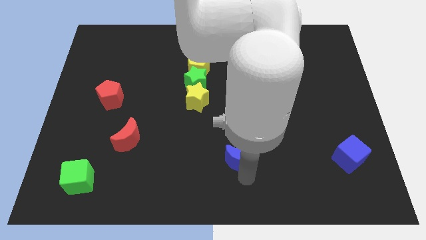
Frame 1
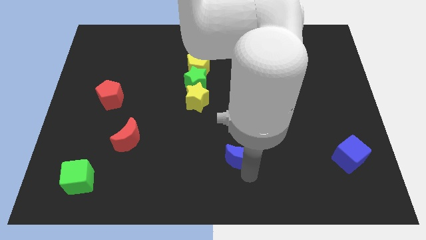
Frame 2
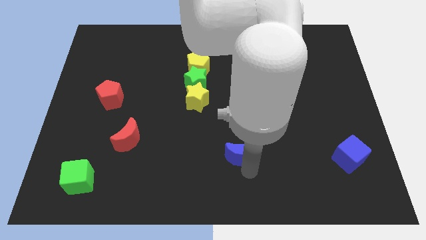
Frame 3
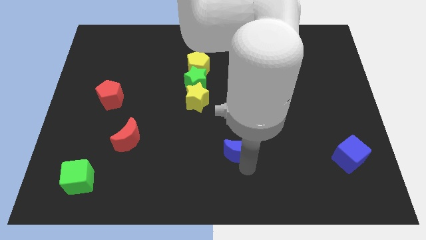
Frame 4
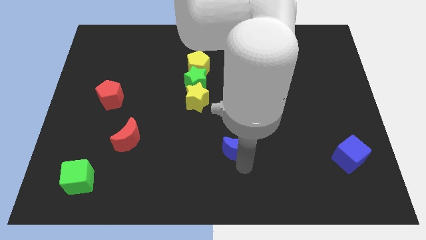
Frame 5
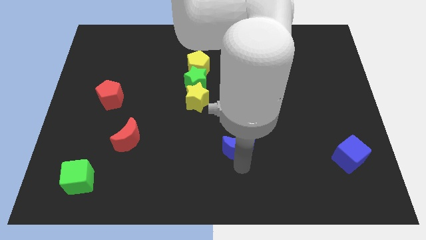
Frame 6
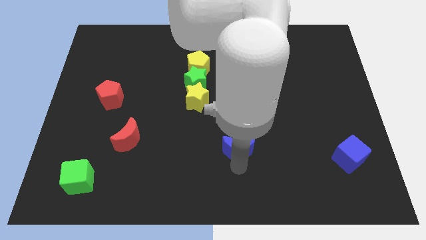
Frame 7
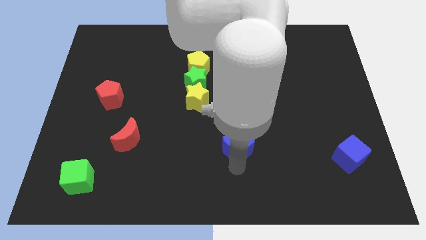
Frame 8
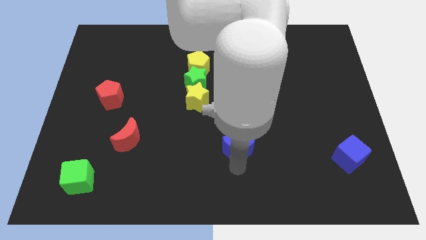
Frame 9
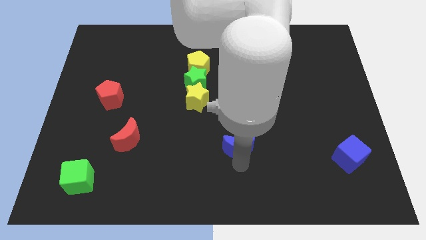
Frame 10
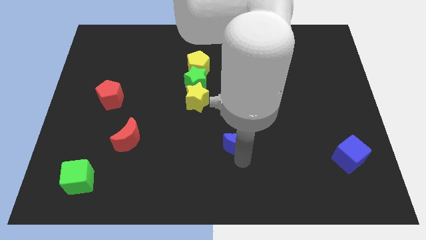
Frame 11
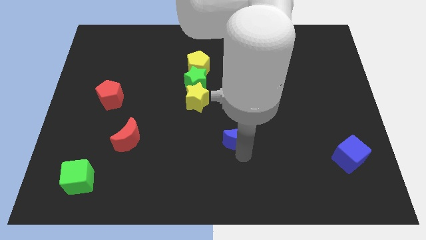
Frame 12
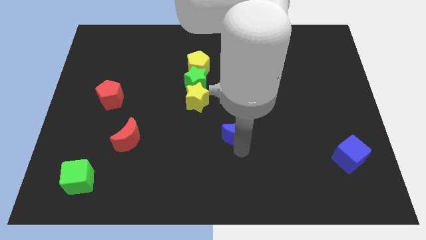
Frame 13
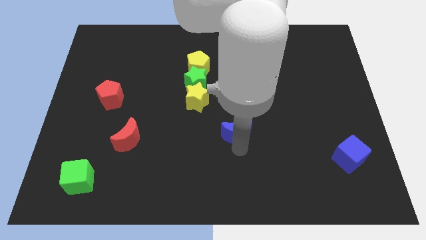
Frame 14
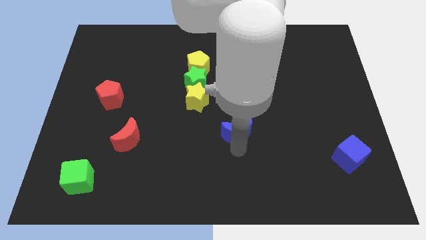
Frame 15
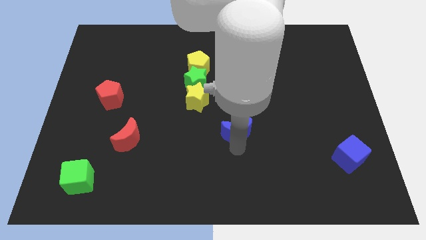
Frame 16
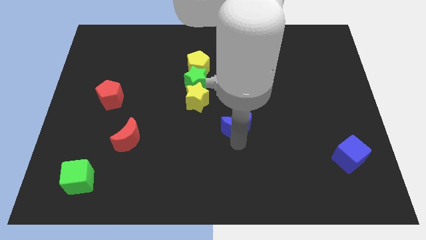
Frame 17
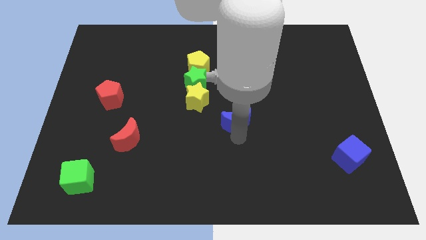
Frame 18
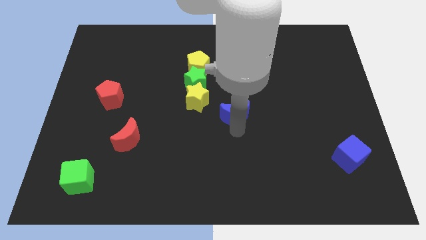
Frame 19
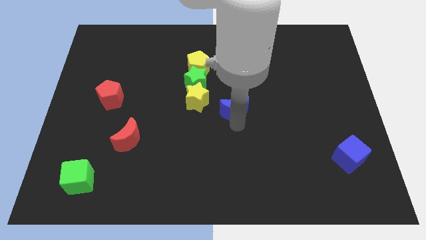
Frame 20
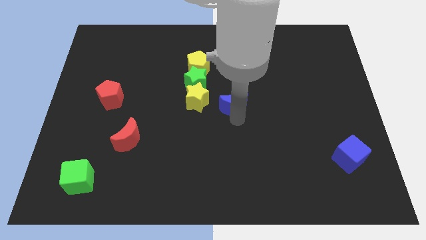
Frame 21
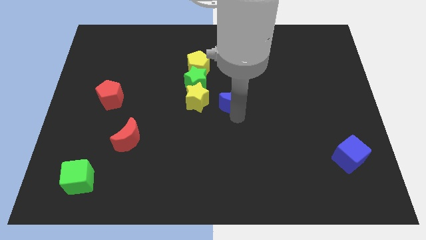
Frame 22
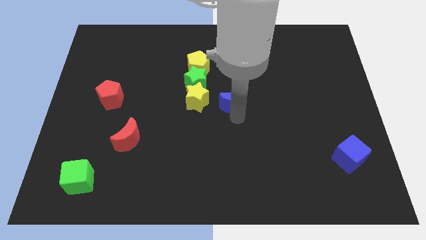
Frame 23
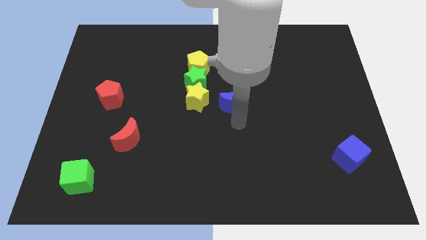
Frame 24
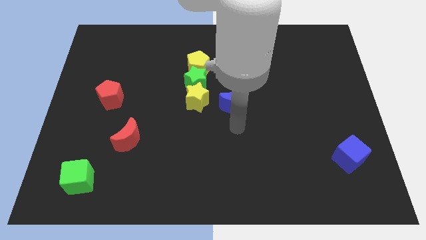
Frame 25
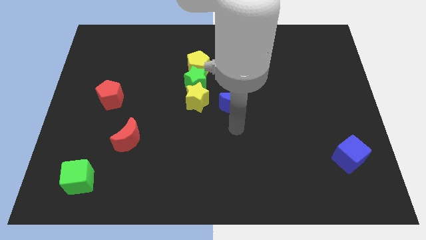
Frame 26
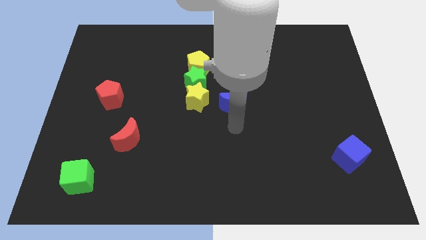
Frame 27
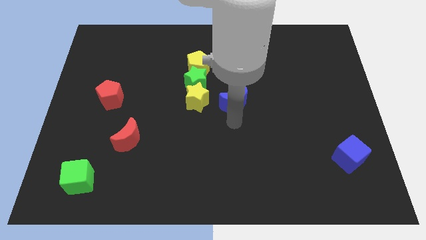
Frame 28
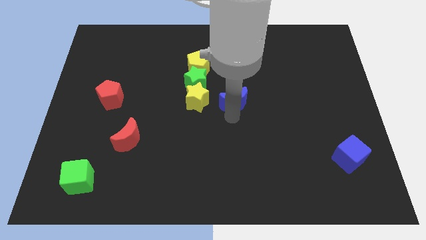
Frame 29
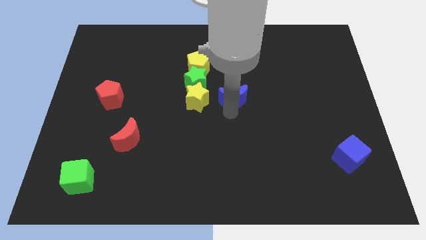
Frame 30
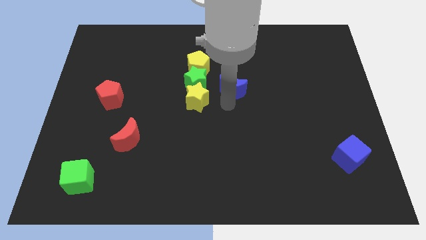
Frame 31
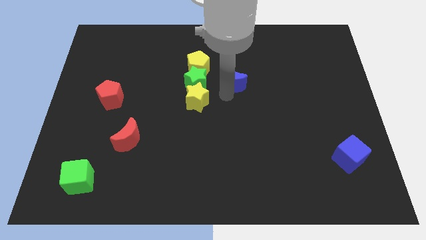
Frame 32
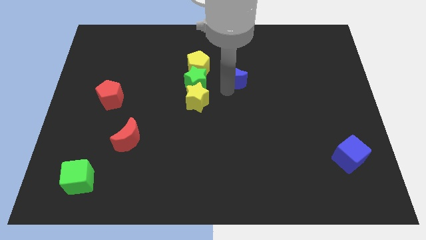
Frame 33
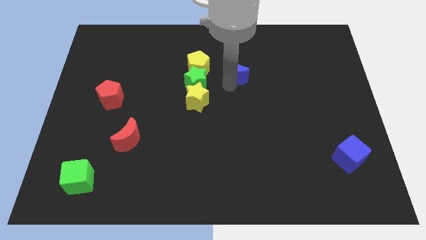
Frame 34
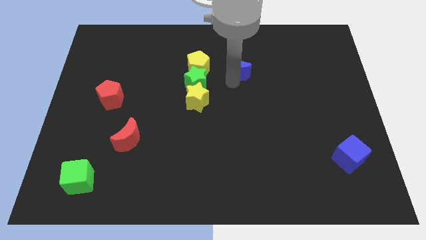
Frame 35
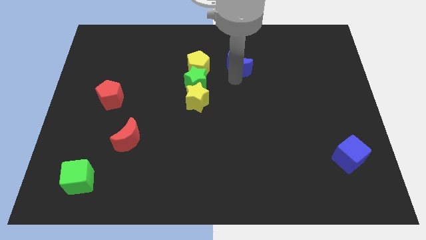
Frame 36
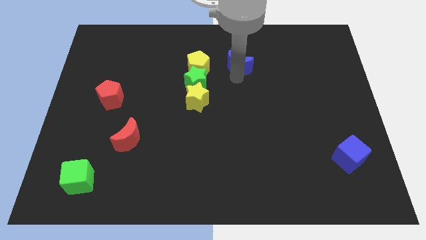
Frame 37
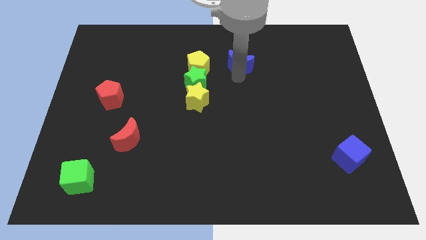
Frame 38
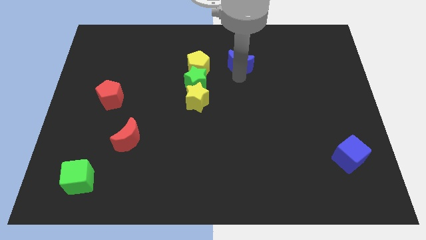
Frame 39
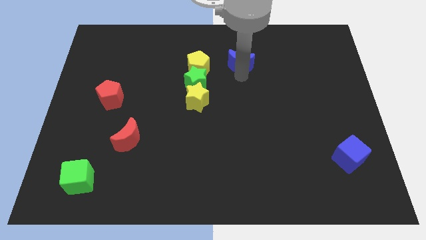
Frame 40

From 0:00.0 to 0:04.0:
push blue moon parallel right to yellow pentagon

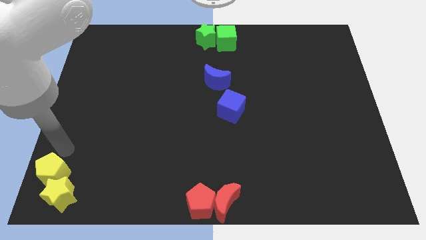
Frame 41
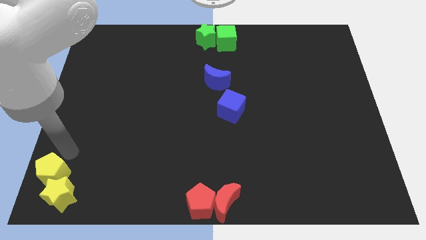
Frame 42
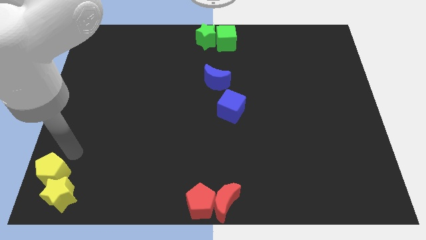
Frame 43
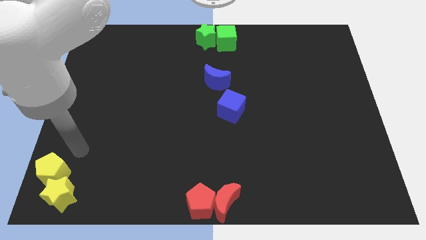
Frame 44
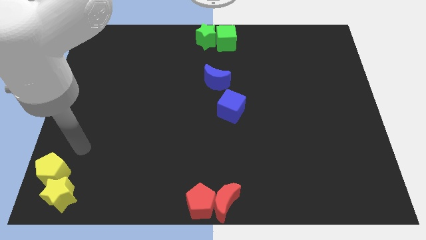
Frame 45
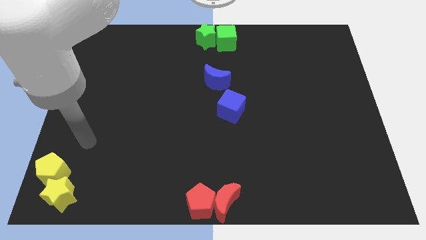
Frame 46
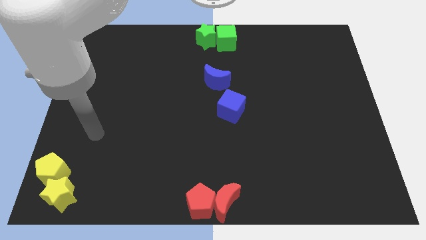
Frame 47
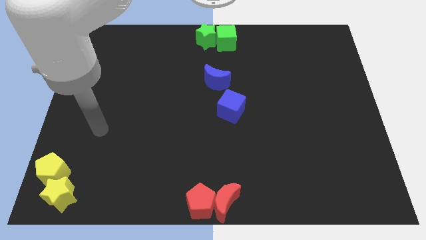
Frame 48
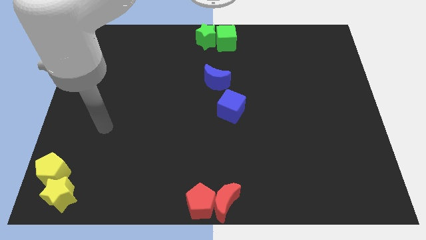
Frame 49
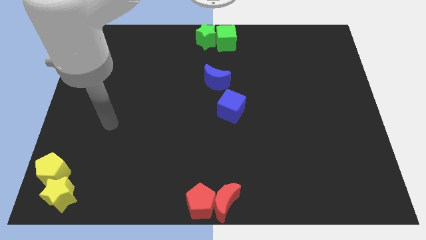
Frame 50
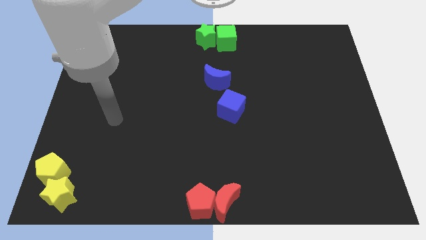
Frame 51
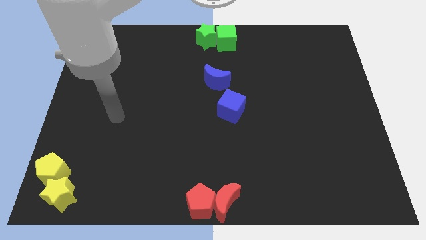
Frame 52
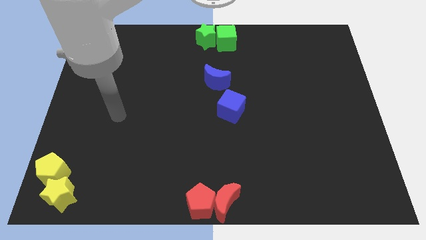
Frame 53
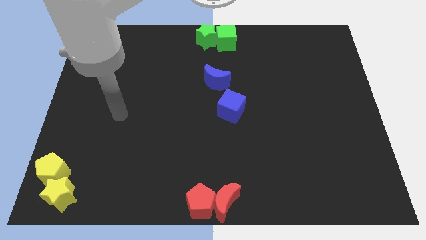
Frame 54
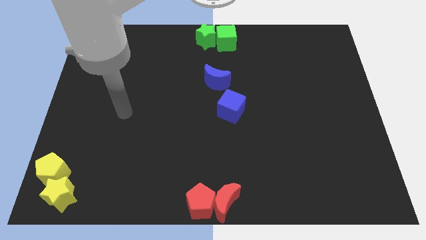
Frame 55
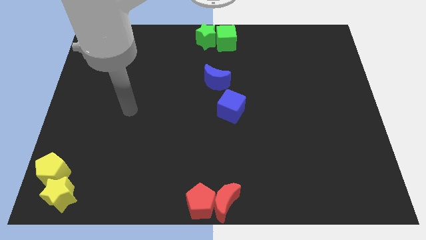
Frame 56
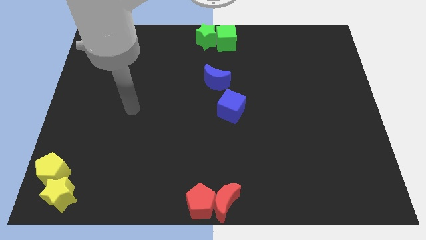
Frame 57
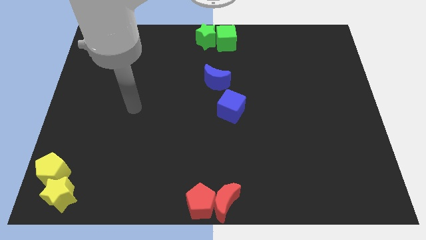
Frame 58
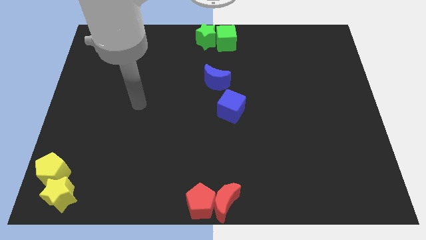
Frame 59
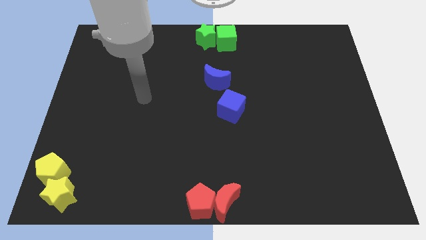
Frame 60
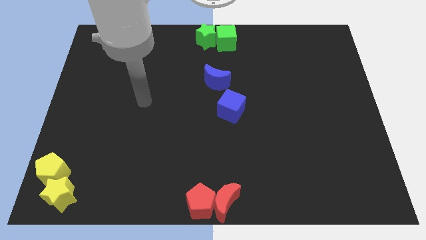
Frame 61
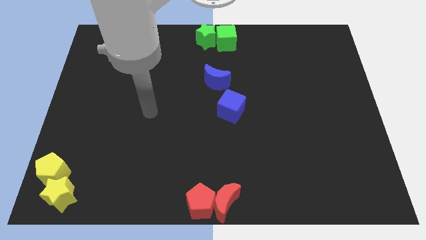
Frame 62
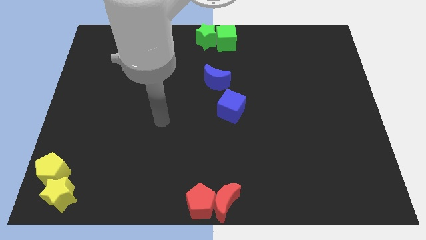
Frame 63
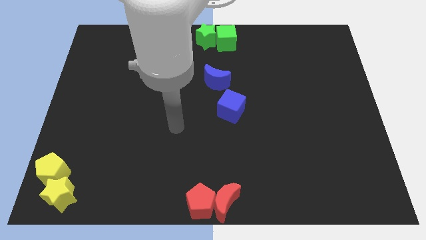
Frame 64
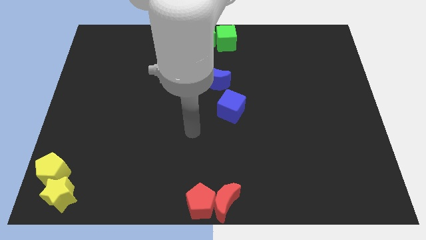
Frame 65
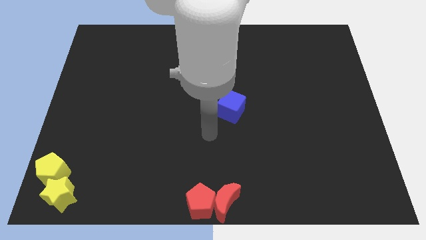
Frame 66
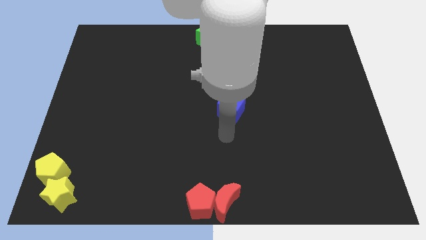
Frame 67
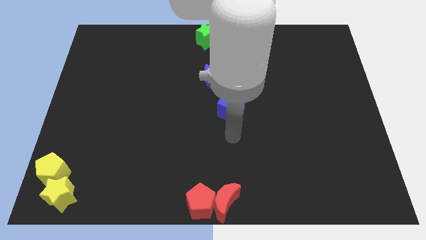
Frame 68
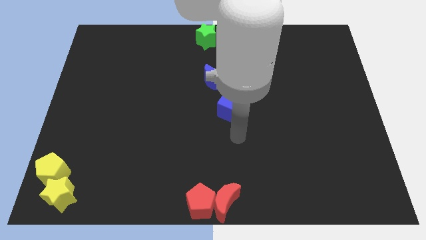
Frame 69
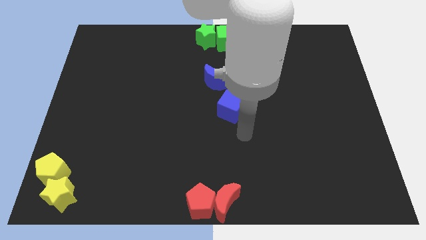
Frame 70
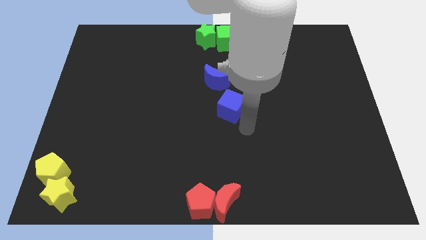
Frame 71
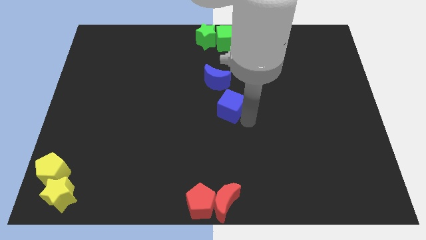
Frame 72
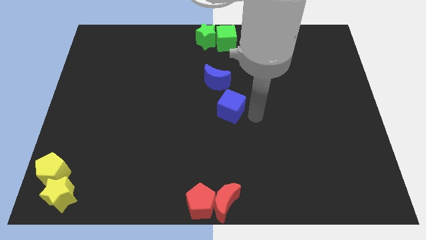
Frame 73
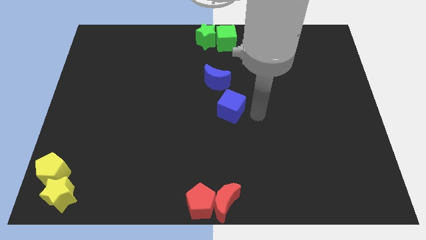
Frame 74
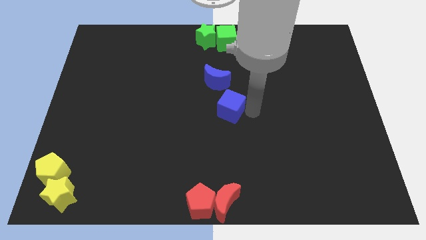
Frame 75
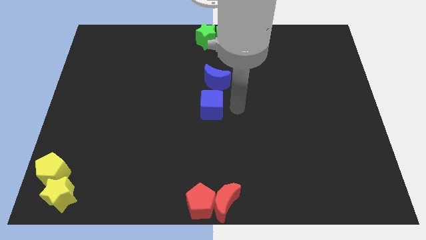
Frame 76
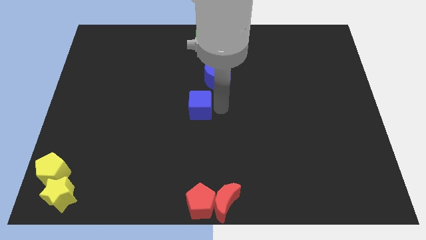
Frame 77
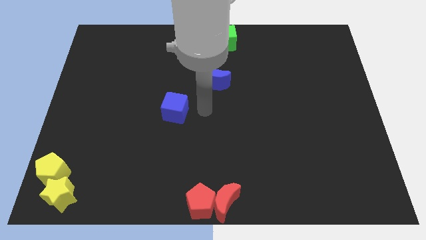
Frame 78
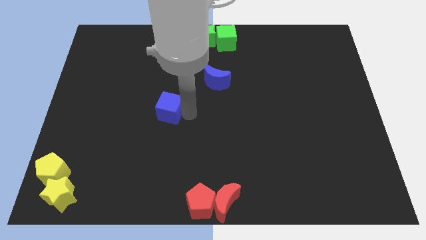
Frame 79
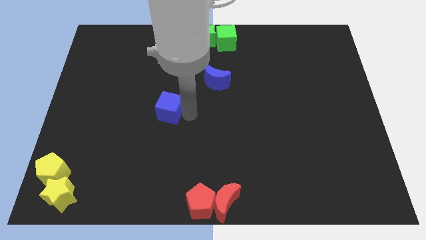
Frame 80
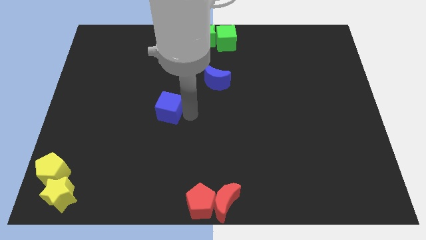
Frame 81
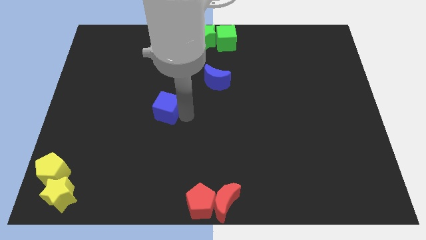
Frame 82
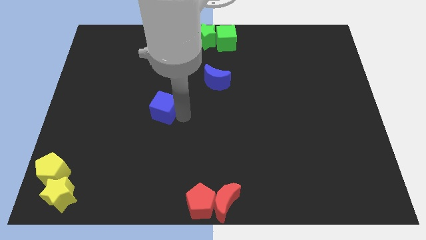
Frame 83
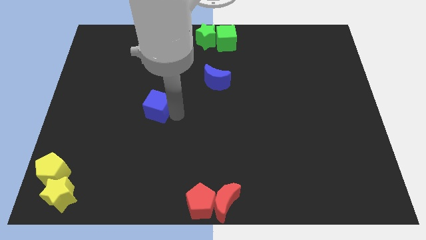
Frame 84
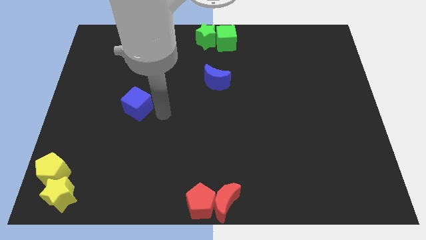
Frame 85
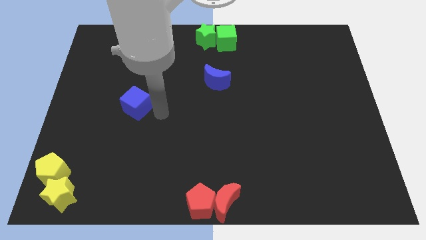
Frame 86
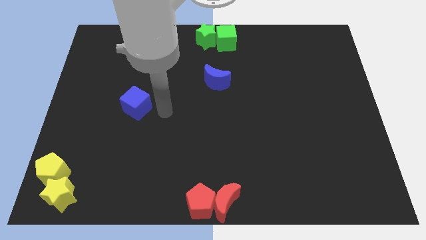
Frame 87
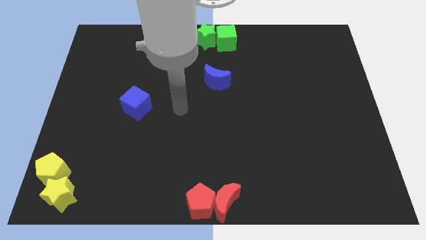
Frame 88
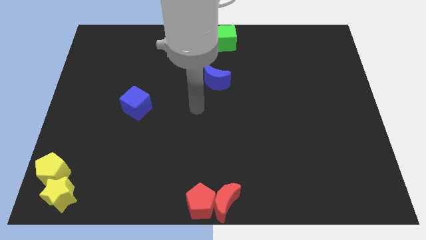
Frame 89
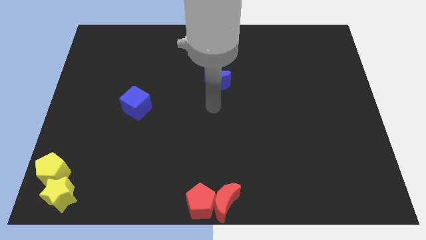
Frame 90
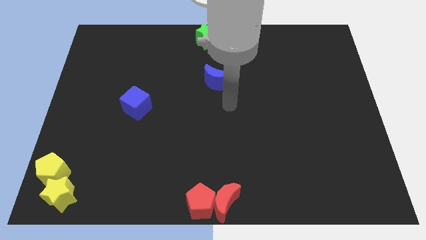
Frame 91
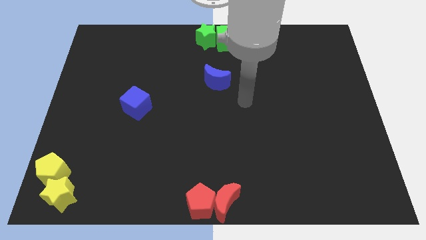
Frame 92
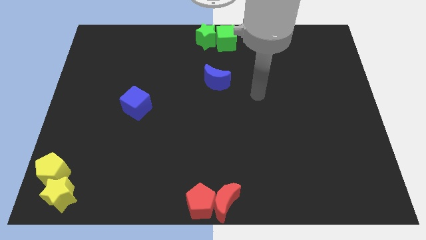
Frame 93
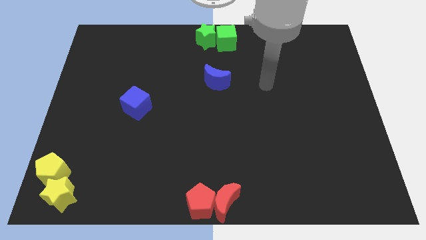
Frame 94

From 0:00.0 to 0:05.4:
separate the blue moon and blue cube
